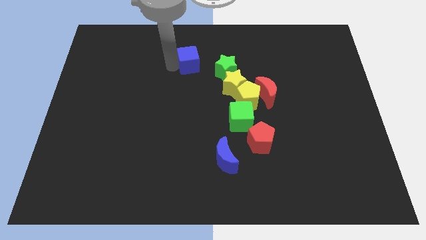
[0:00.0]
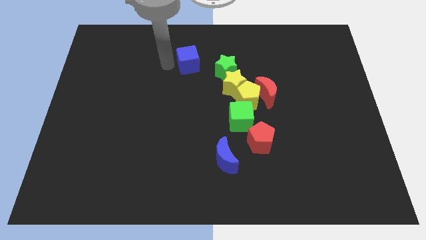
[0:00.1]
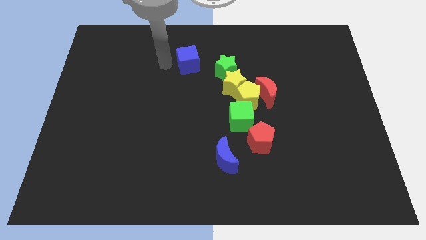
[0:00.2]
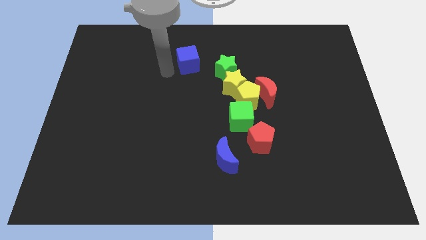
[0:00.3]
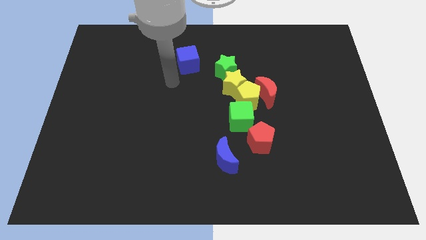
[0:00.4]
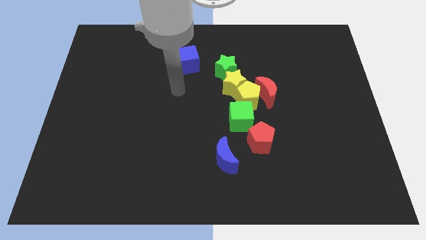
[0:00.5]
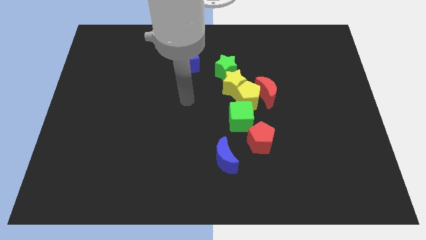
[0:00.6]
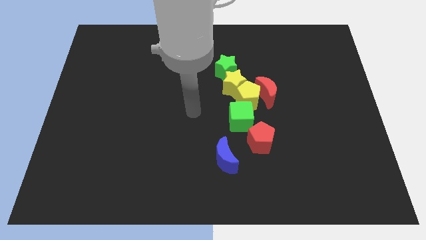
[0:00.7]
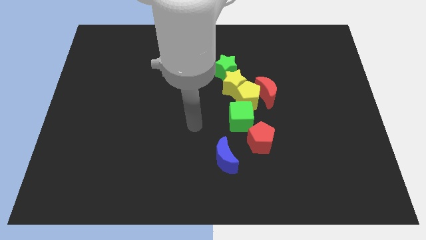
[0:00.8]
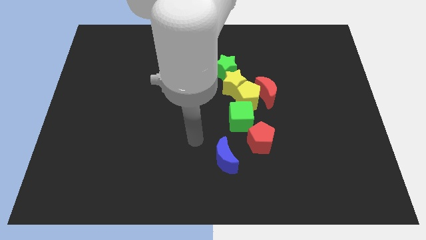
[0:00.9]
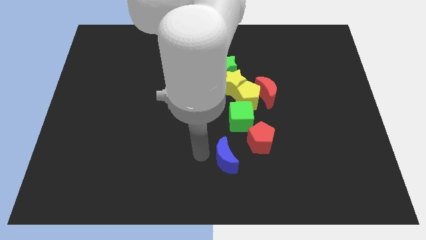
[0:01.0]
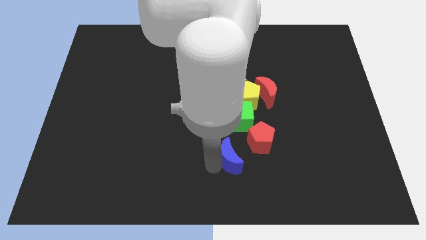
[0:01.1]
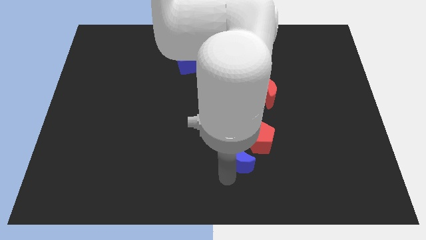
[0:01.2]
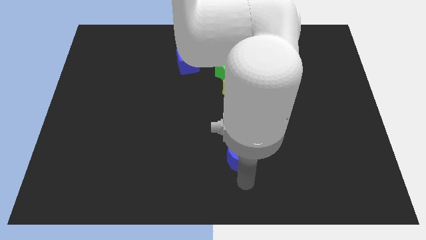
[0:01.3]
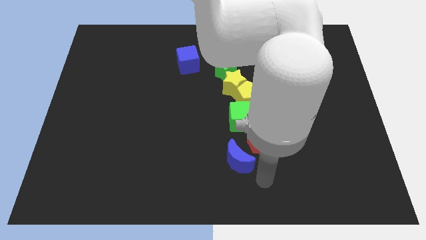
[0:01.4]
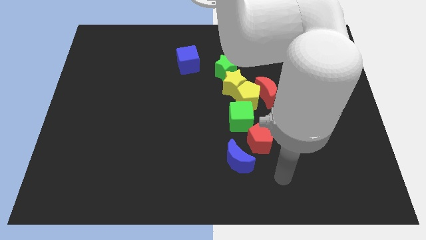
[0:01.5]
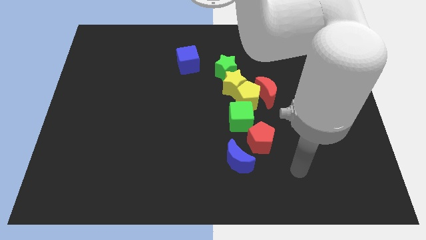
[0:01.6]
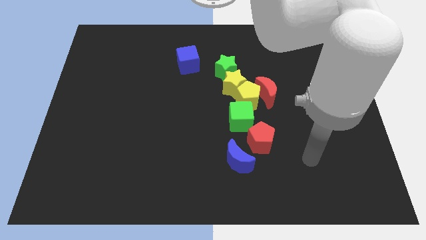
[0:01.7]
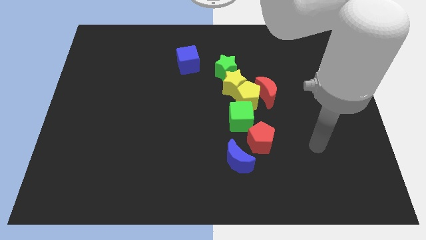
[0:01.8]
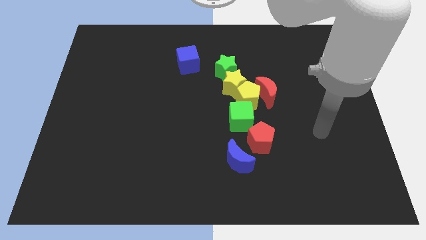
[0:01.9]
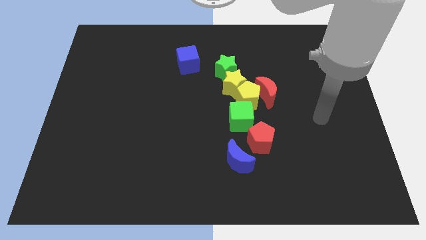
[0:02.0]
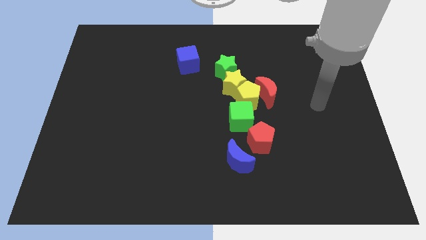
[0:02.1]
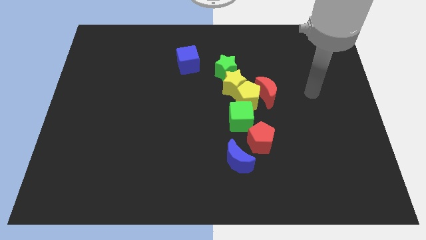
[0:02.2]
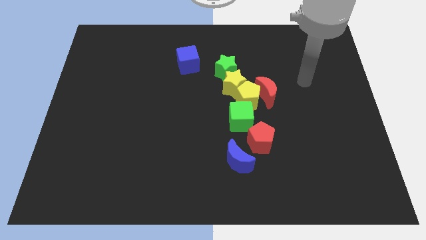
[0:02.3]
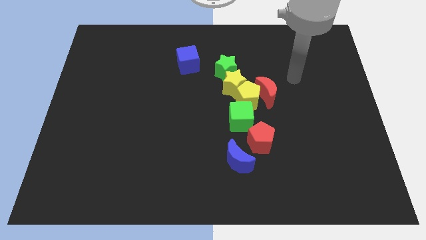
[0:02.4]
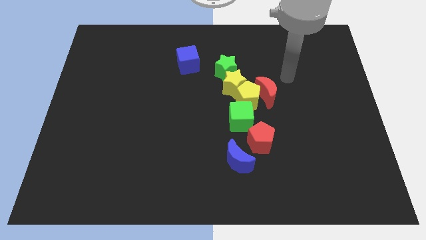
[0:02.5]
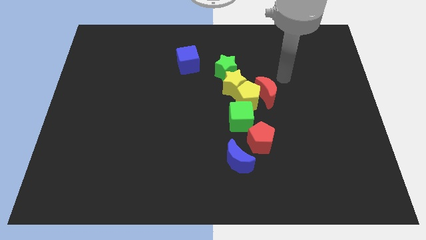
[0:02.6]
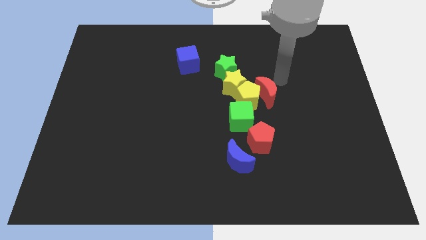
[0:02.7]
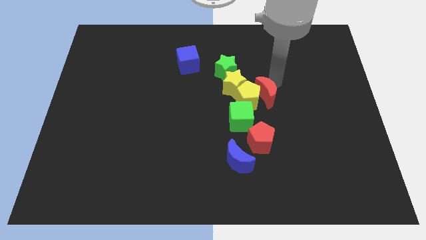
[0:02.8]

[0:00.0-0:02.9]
move the arm above the red crescent

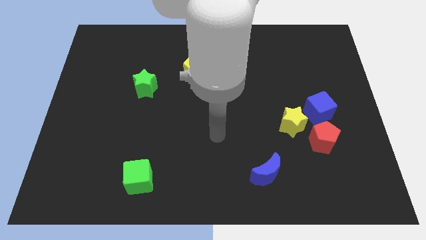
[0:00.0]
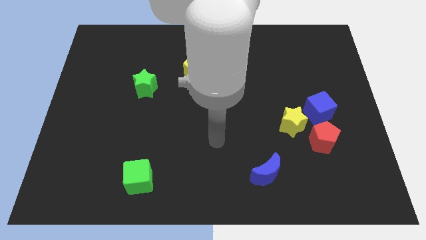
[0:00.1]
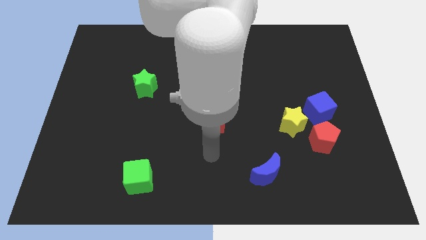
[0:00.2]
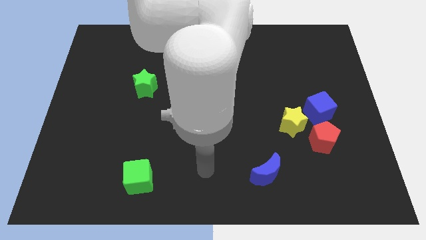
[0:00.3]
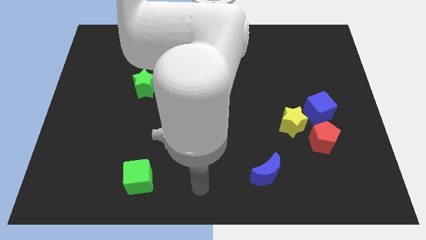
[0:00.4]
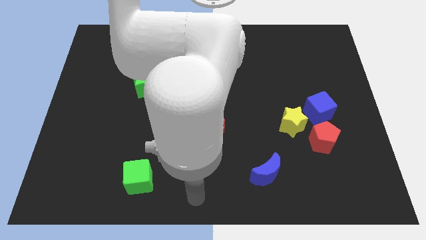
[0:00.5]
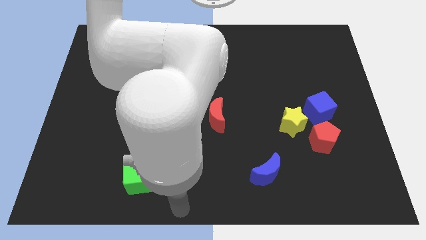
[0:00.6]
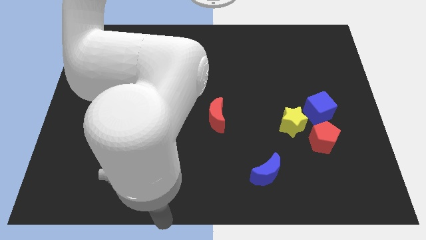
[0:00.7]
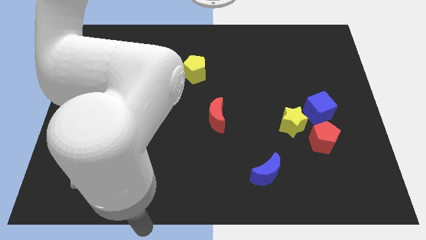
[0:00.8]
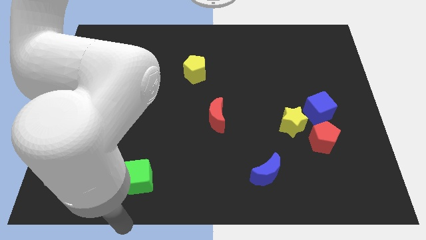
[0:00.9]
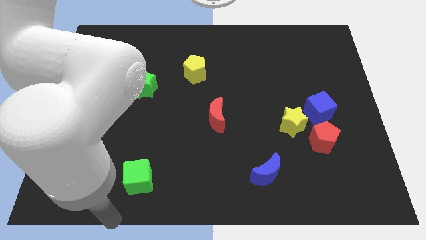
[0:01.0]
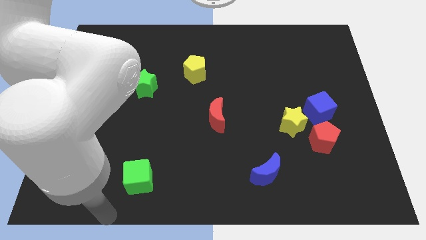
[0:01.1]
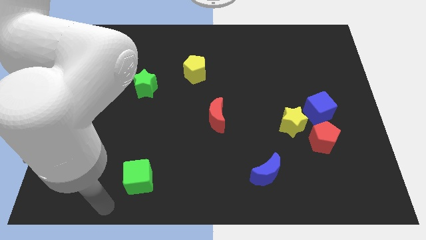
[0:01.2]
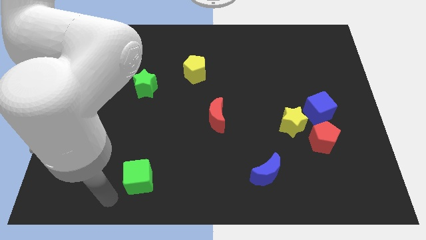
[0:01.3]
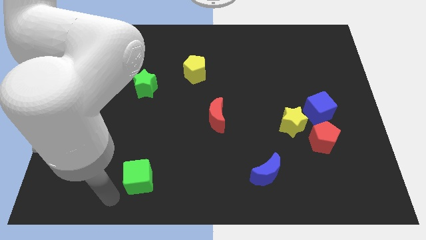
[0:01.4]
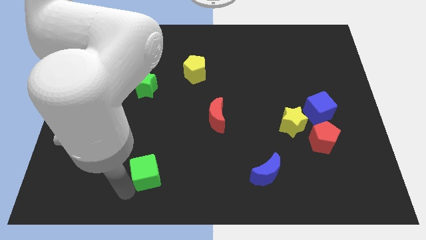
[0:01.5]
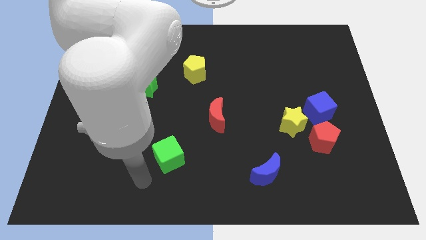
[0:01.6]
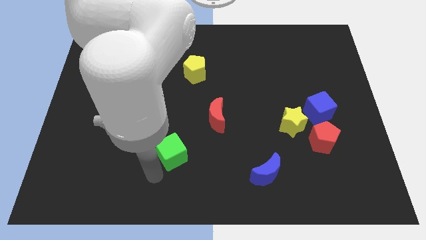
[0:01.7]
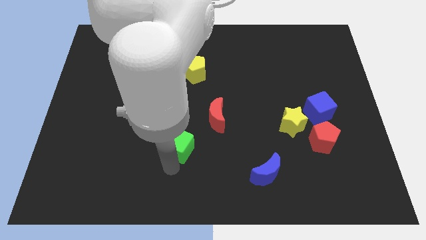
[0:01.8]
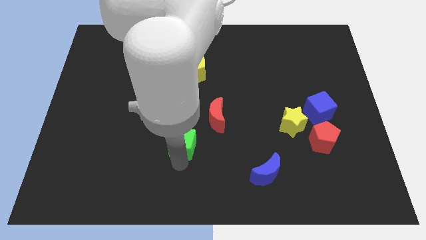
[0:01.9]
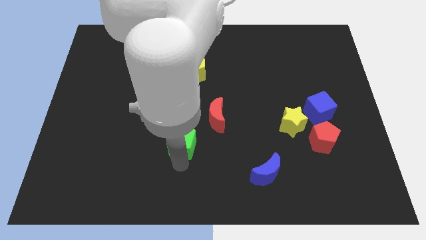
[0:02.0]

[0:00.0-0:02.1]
place the green cube below the yellow pentagon

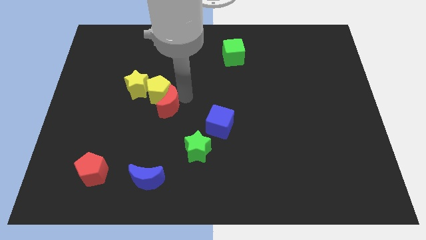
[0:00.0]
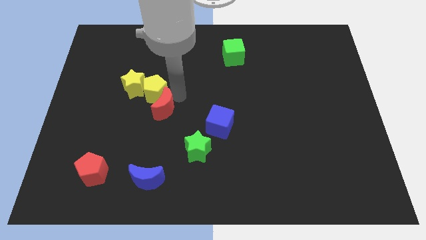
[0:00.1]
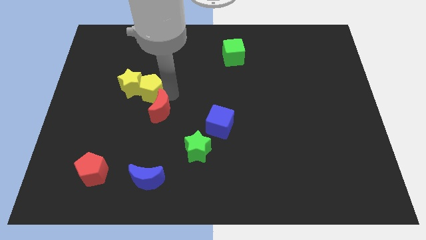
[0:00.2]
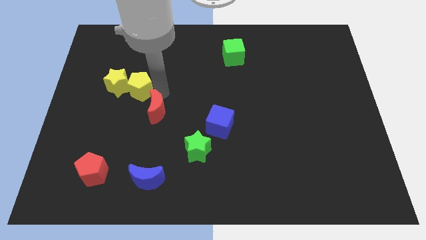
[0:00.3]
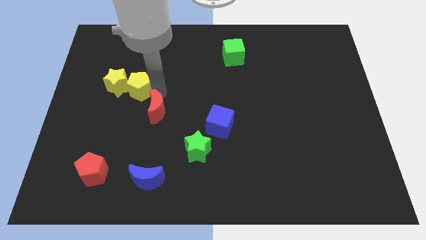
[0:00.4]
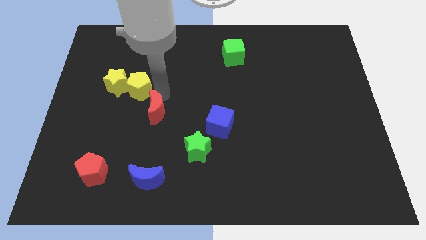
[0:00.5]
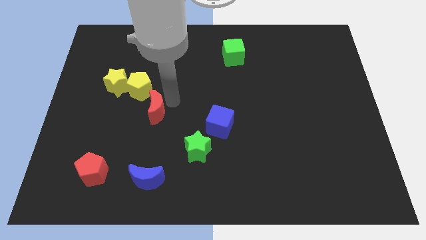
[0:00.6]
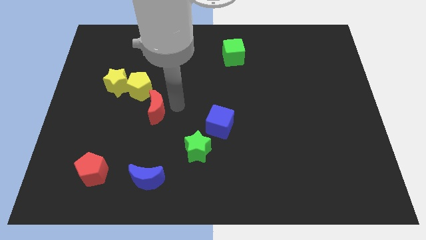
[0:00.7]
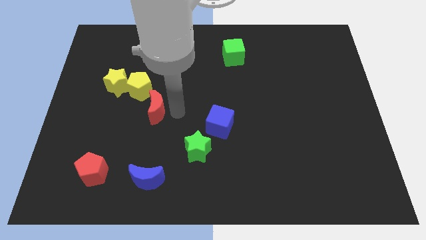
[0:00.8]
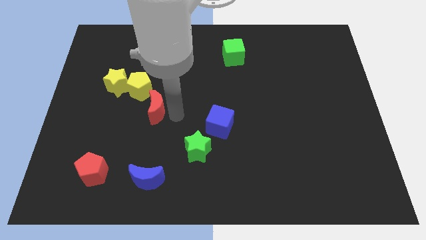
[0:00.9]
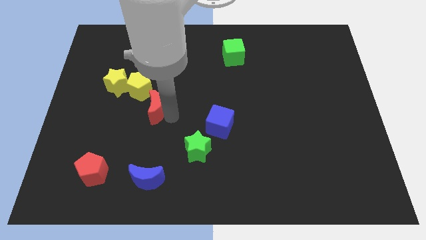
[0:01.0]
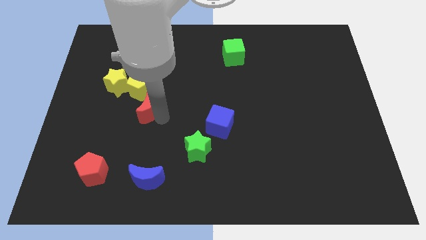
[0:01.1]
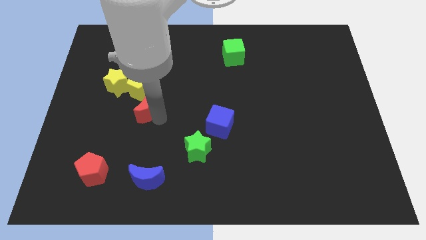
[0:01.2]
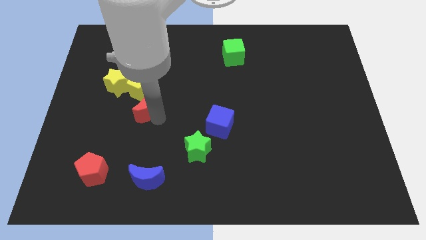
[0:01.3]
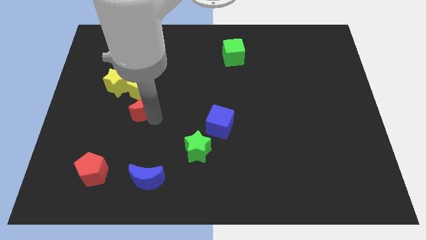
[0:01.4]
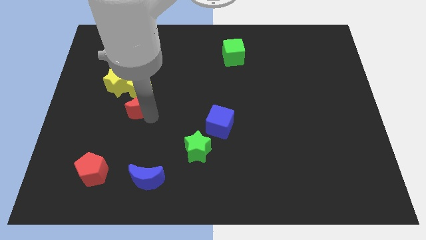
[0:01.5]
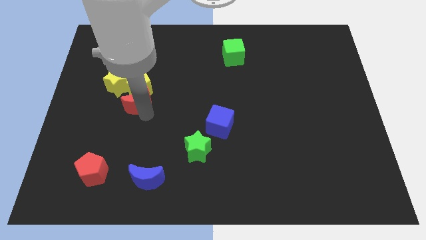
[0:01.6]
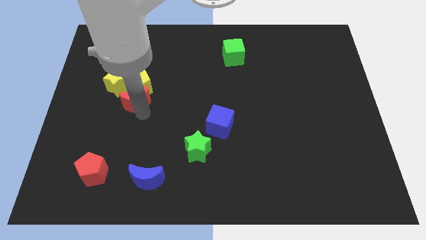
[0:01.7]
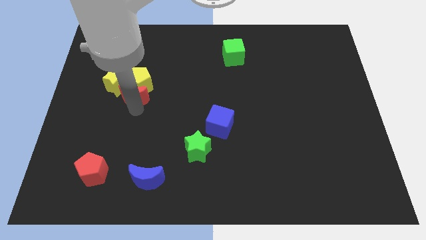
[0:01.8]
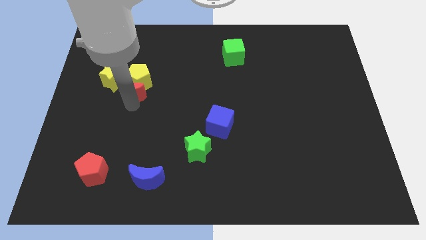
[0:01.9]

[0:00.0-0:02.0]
move the yellow blocks and the red moon slightly to the left

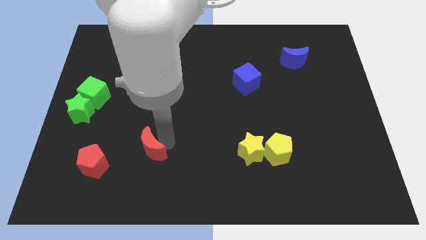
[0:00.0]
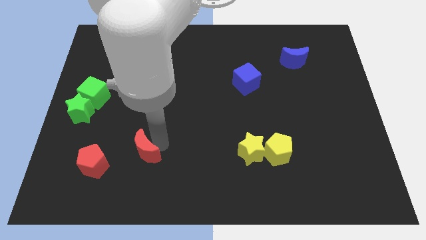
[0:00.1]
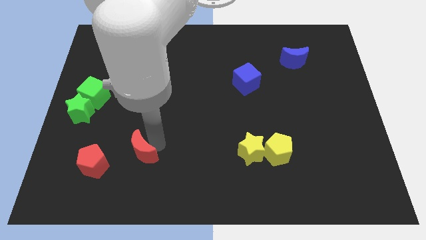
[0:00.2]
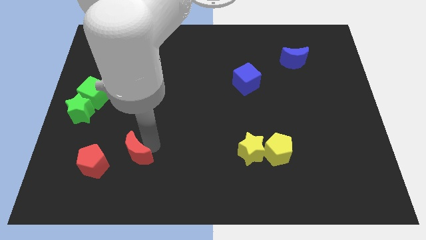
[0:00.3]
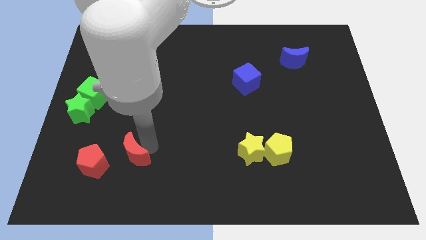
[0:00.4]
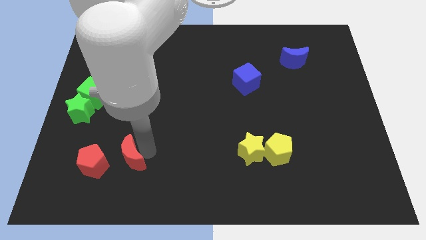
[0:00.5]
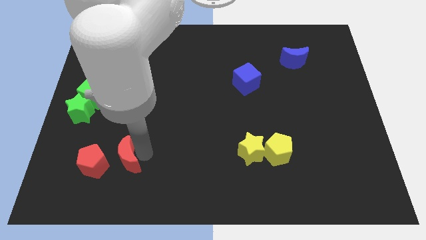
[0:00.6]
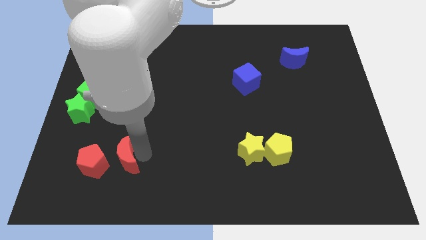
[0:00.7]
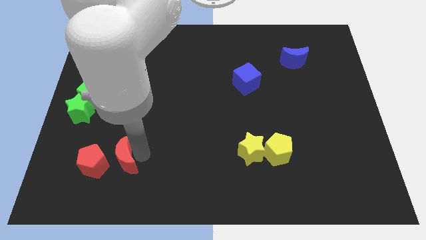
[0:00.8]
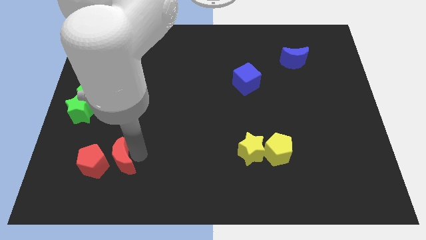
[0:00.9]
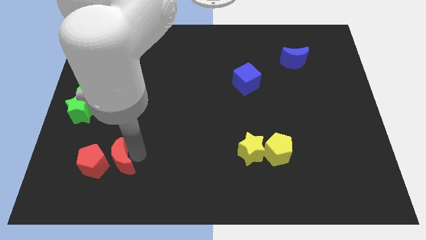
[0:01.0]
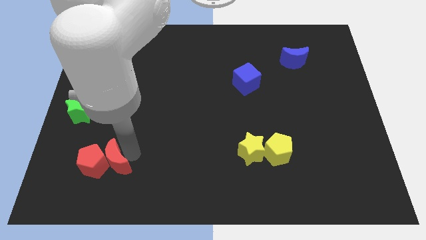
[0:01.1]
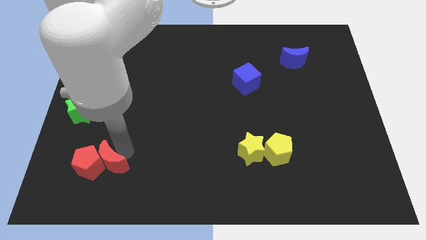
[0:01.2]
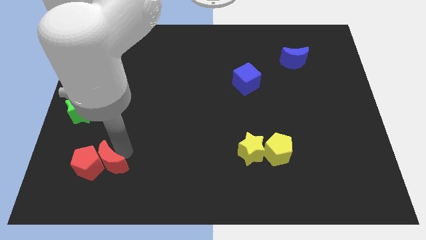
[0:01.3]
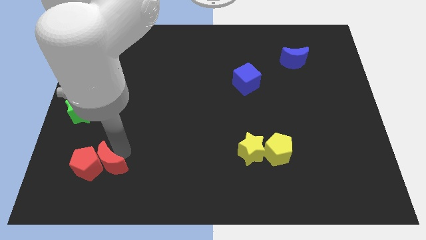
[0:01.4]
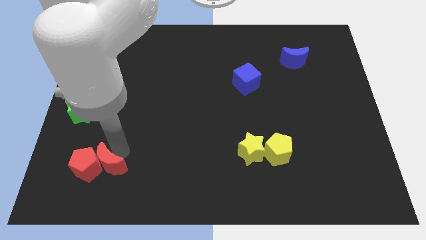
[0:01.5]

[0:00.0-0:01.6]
push the red moon into the red pentagon

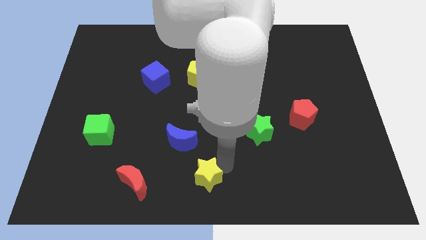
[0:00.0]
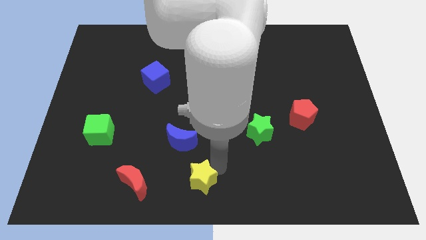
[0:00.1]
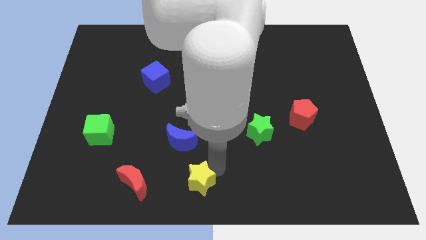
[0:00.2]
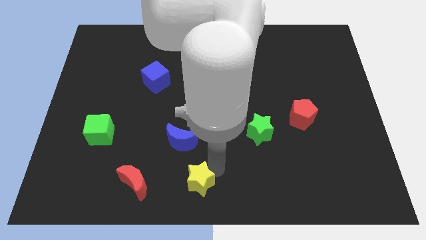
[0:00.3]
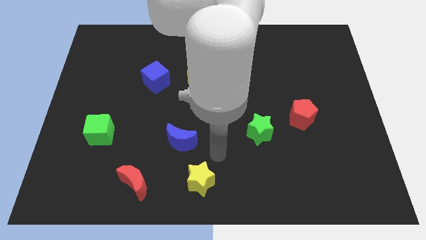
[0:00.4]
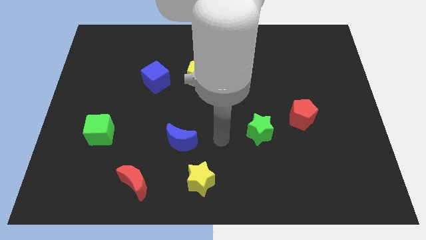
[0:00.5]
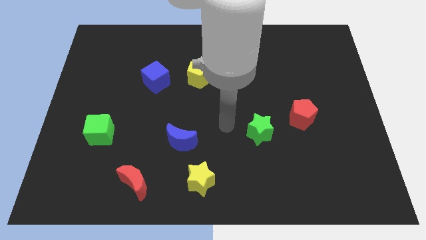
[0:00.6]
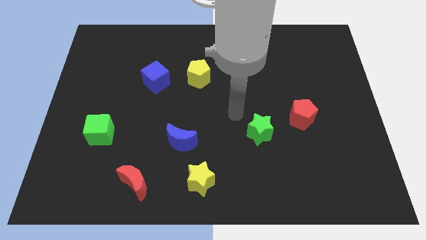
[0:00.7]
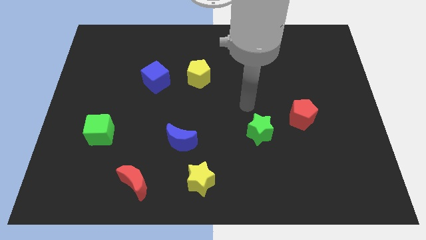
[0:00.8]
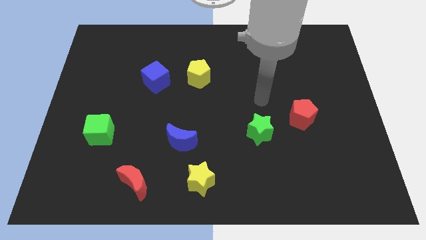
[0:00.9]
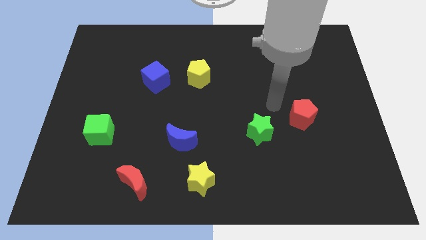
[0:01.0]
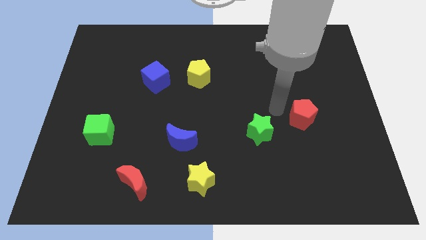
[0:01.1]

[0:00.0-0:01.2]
move your arm to the left of the red pentagon
